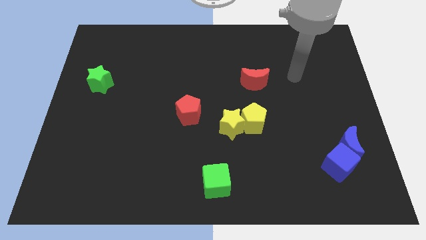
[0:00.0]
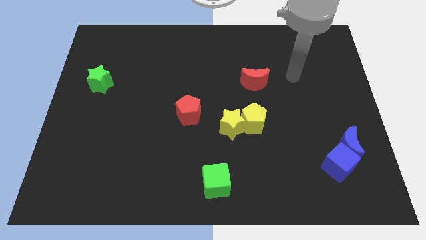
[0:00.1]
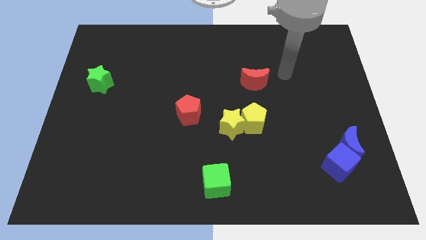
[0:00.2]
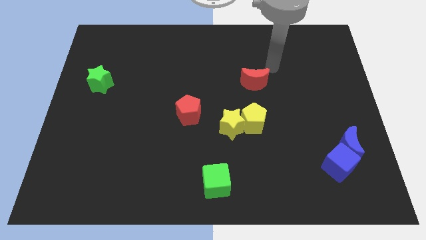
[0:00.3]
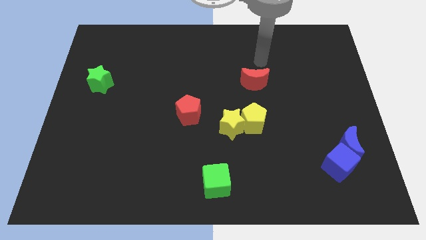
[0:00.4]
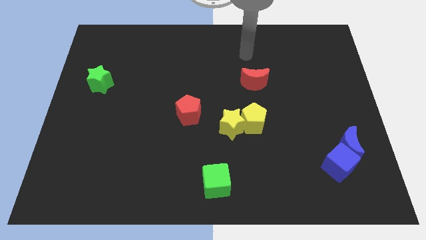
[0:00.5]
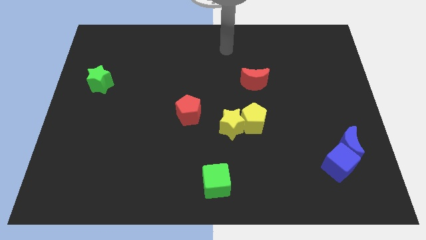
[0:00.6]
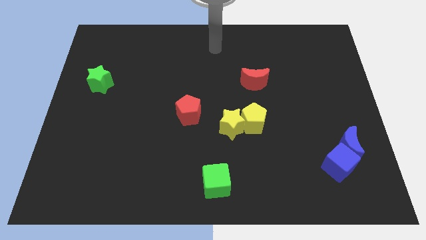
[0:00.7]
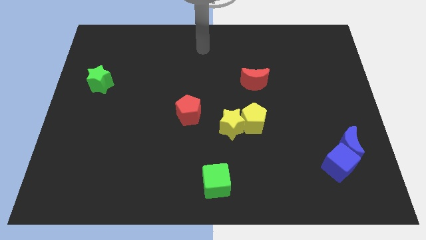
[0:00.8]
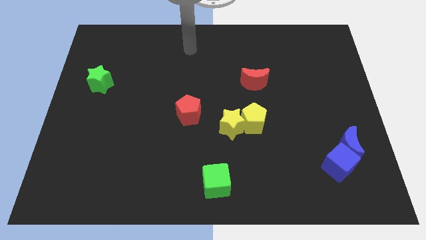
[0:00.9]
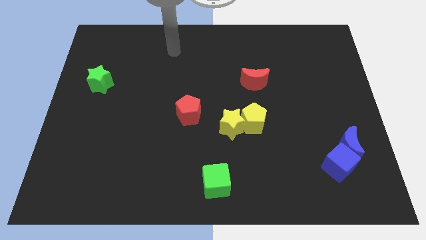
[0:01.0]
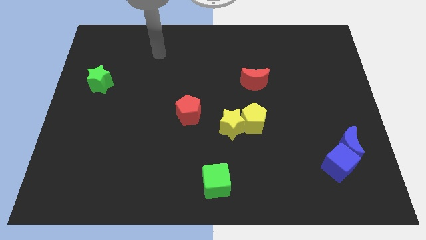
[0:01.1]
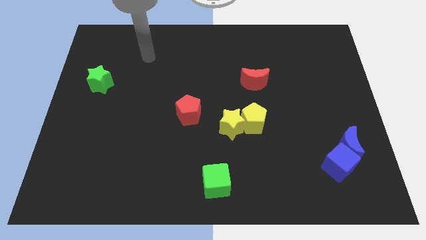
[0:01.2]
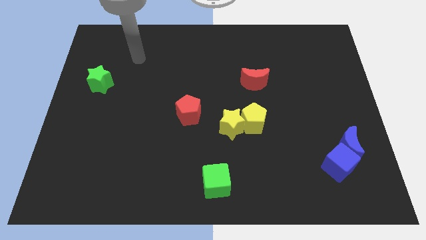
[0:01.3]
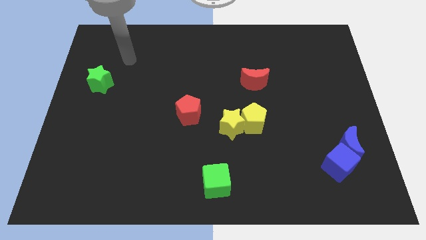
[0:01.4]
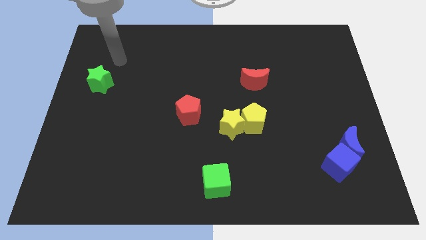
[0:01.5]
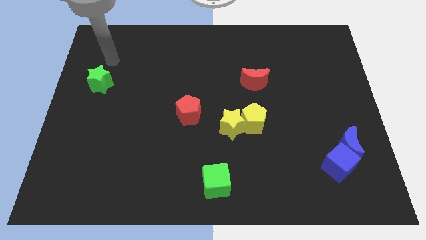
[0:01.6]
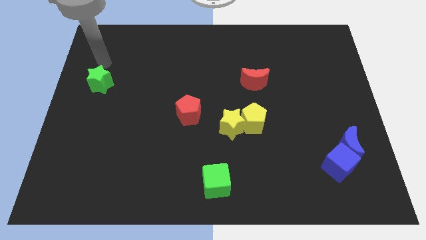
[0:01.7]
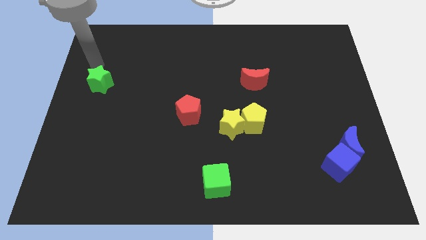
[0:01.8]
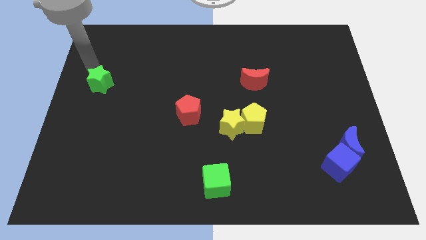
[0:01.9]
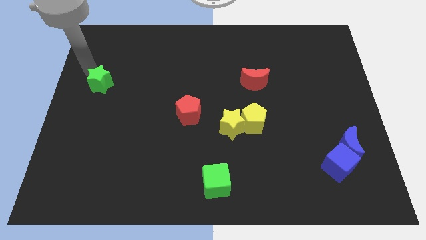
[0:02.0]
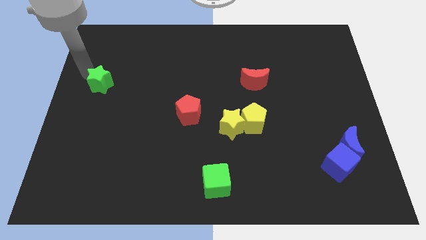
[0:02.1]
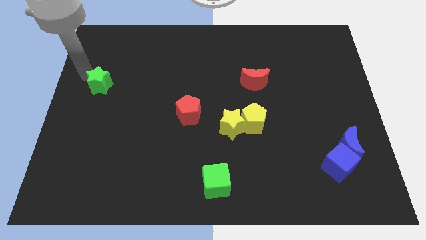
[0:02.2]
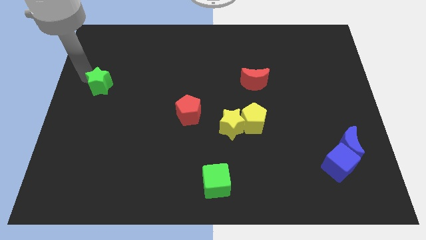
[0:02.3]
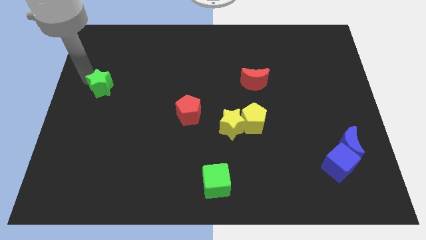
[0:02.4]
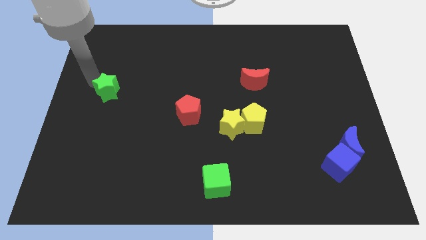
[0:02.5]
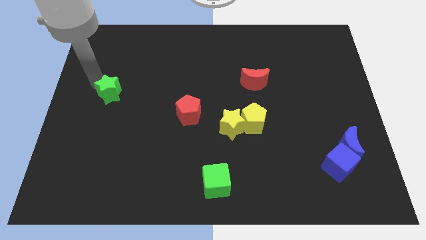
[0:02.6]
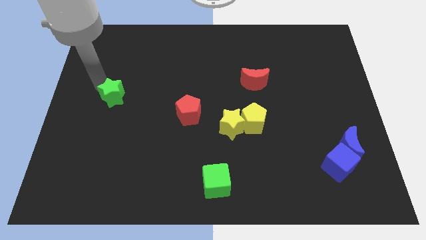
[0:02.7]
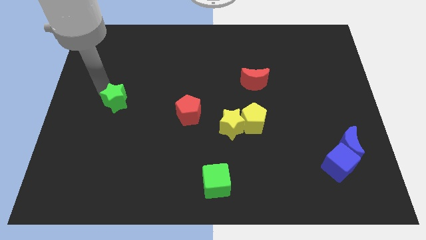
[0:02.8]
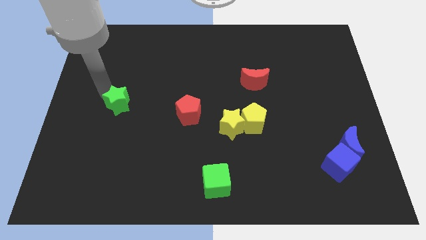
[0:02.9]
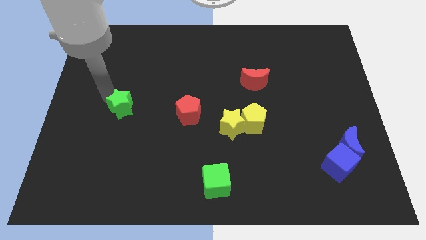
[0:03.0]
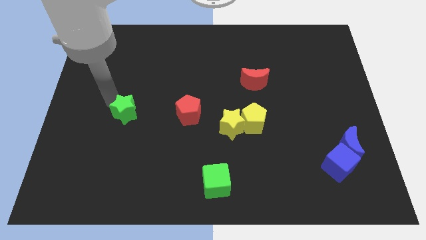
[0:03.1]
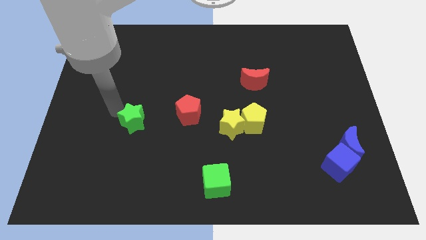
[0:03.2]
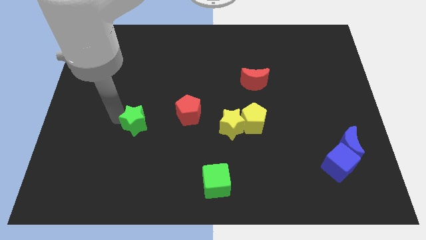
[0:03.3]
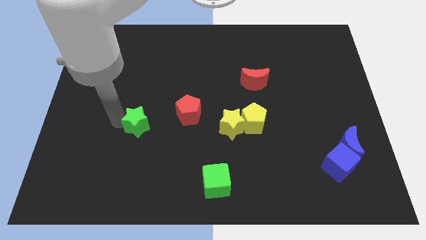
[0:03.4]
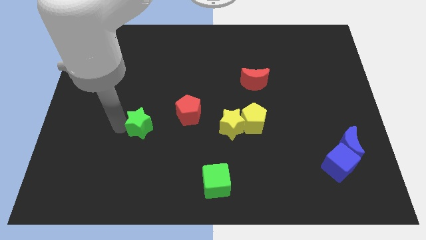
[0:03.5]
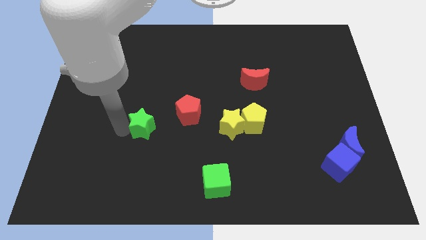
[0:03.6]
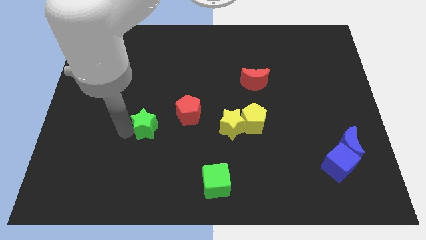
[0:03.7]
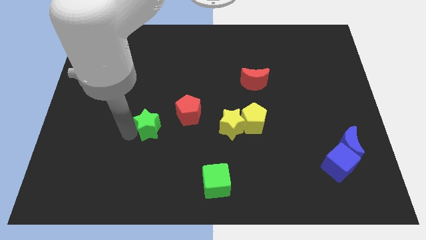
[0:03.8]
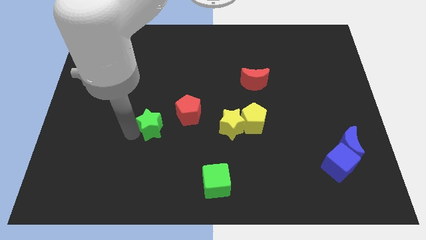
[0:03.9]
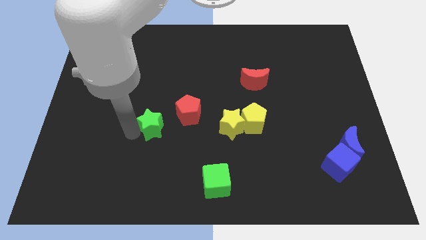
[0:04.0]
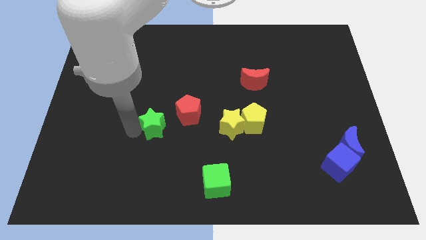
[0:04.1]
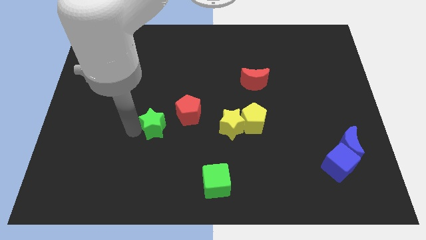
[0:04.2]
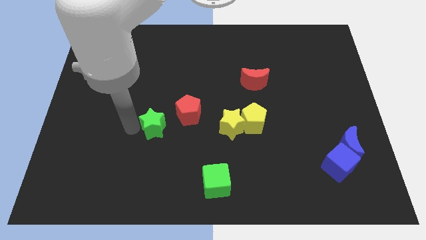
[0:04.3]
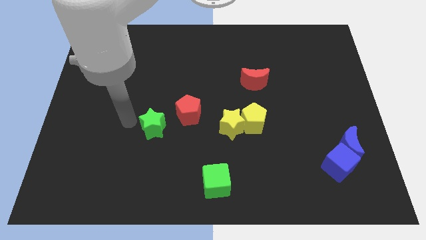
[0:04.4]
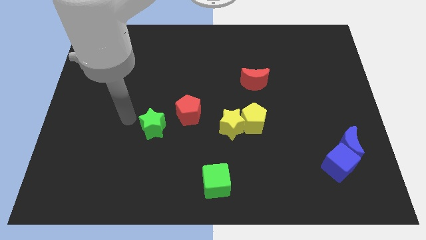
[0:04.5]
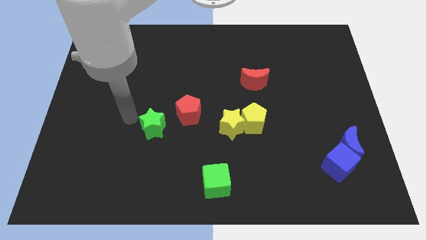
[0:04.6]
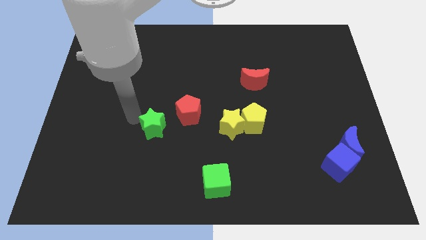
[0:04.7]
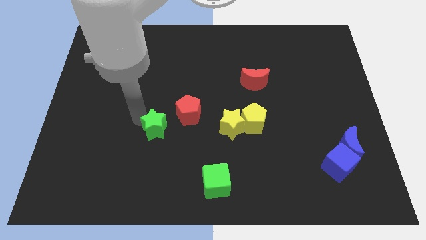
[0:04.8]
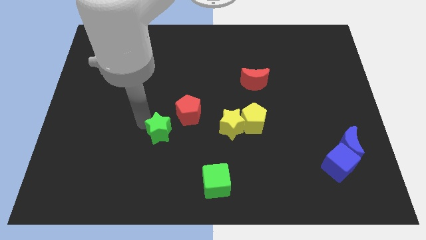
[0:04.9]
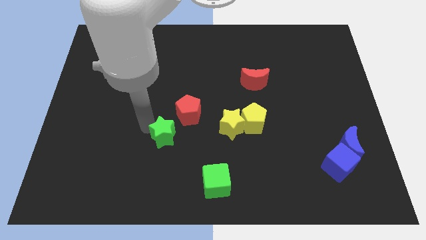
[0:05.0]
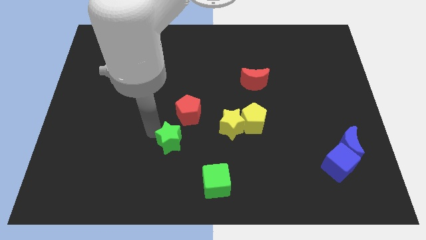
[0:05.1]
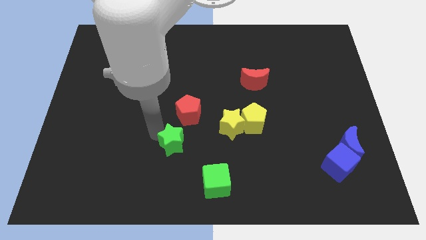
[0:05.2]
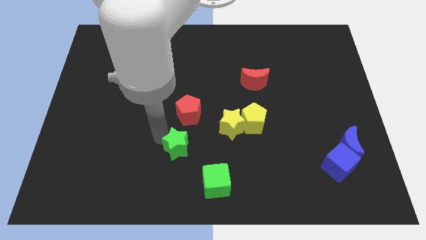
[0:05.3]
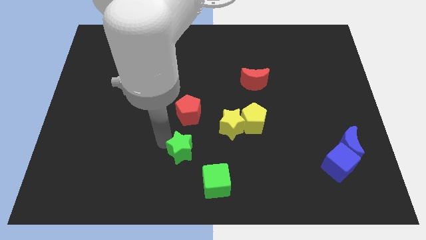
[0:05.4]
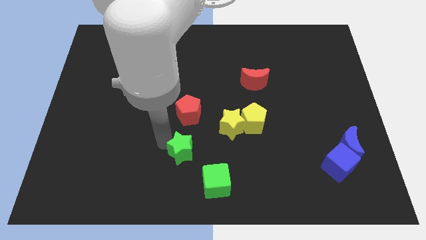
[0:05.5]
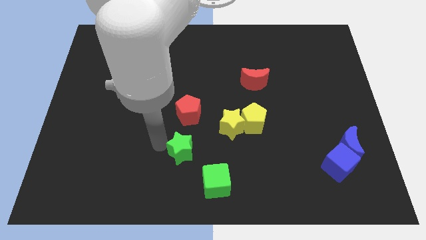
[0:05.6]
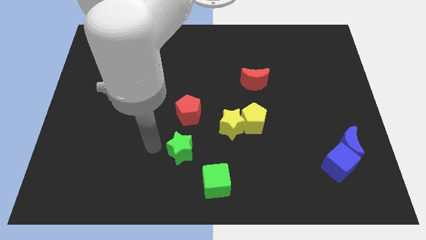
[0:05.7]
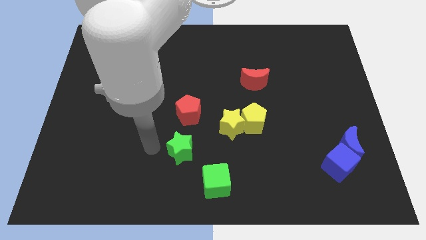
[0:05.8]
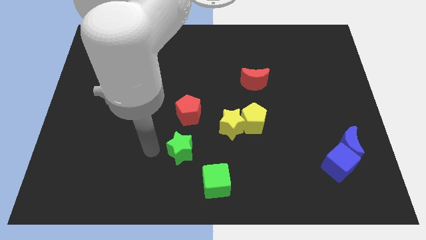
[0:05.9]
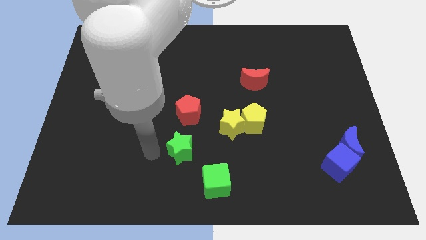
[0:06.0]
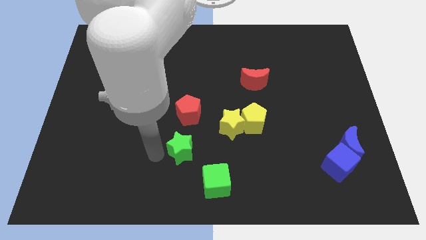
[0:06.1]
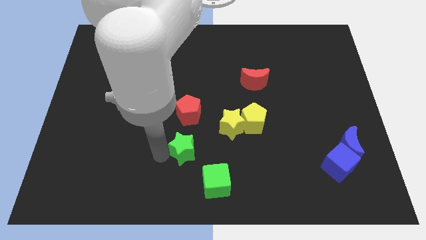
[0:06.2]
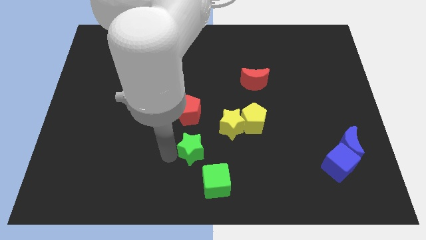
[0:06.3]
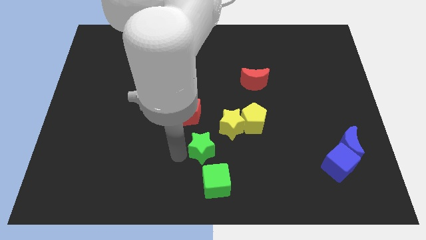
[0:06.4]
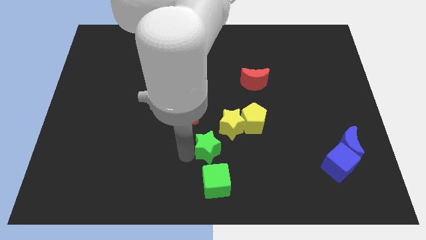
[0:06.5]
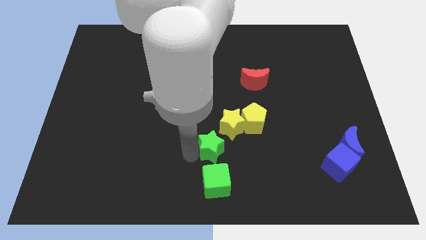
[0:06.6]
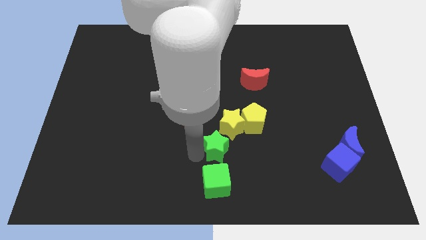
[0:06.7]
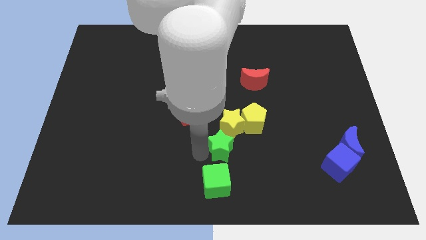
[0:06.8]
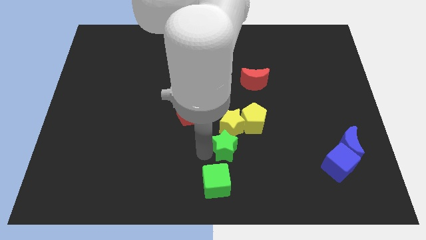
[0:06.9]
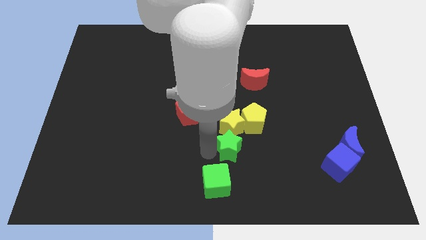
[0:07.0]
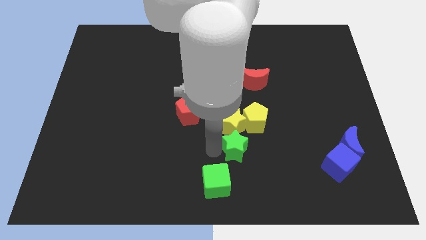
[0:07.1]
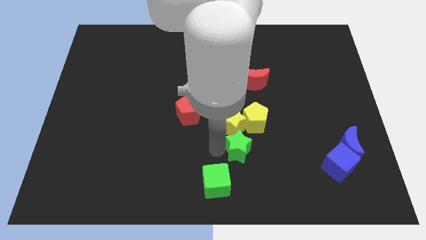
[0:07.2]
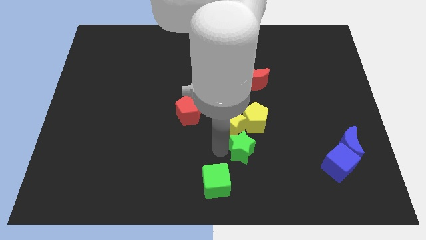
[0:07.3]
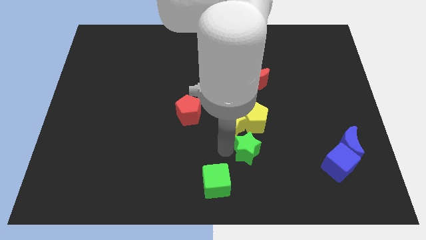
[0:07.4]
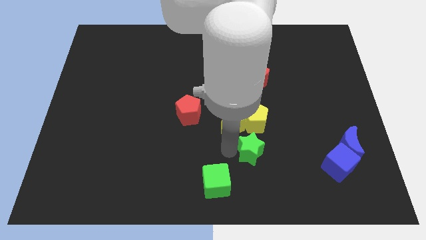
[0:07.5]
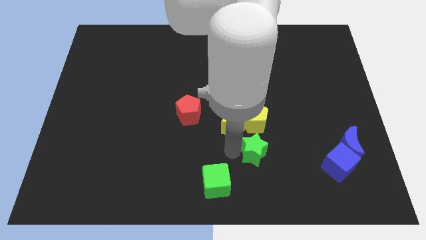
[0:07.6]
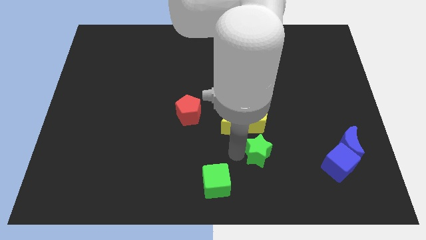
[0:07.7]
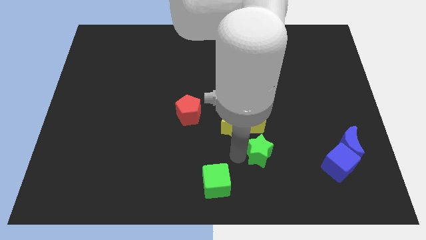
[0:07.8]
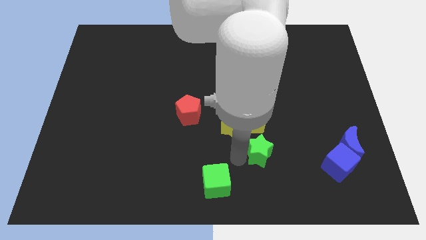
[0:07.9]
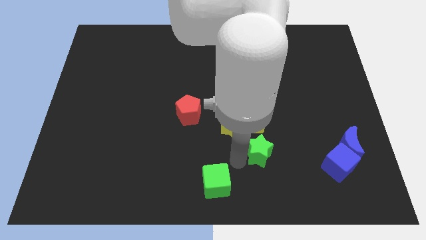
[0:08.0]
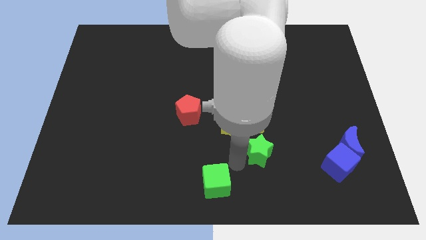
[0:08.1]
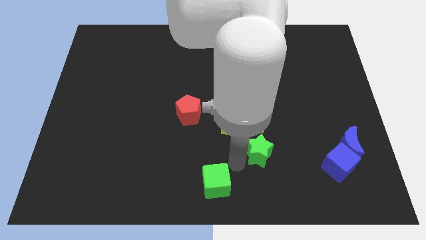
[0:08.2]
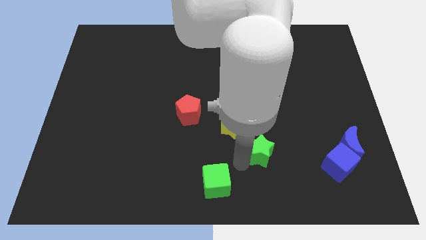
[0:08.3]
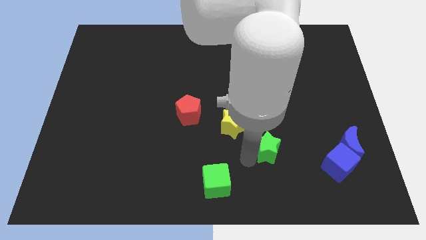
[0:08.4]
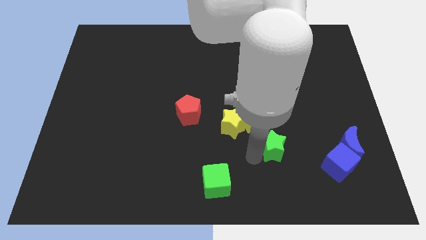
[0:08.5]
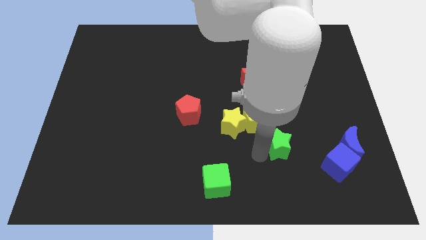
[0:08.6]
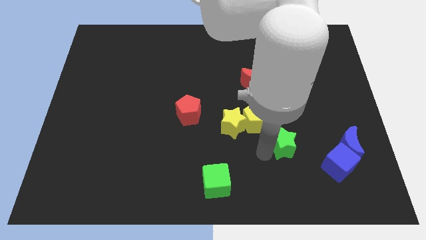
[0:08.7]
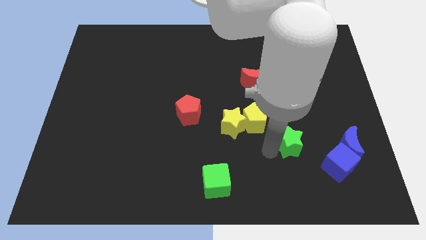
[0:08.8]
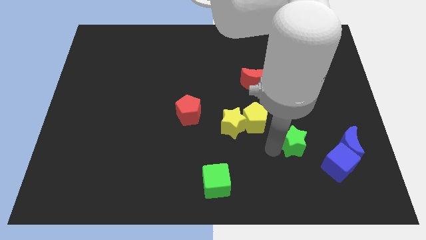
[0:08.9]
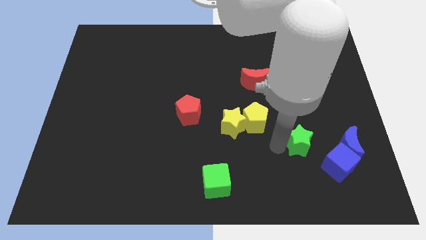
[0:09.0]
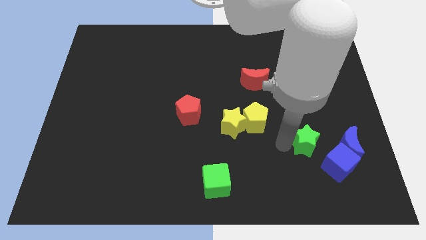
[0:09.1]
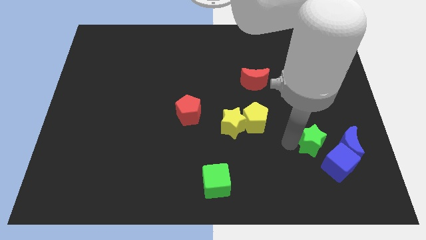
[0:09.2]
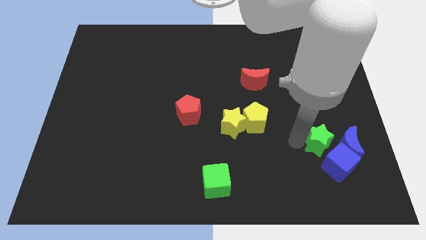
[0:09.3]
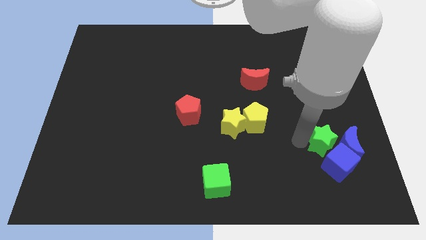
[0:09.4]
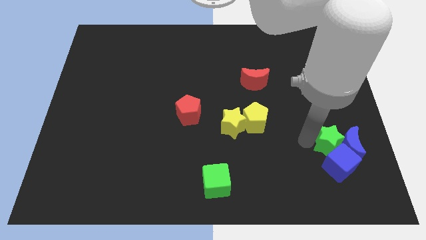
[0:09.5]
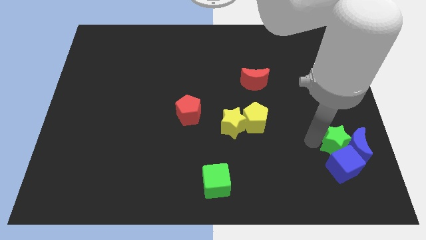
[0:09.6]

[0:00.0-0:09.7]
push the green star next to the blue moon
